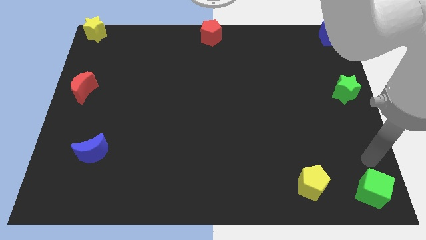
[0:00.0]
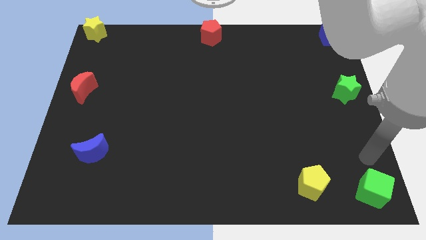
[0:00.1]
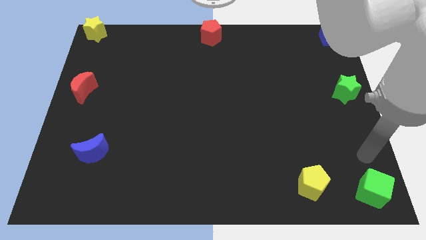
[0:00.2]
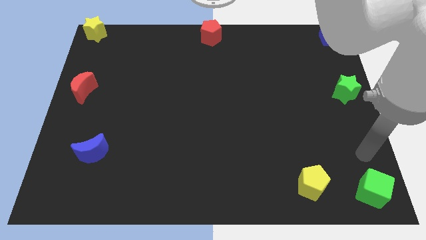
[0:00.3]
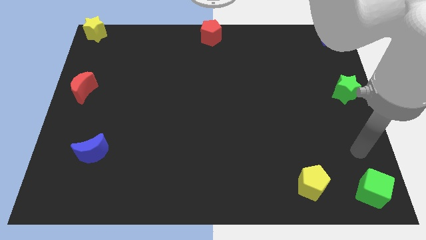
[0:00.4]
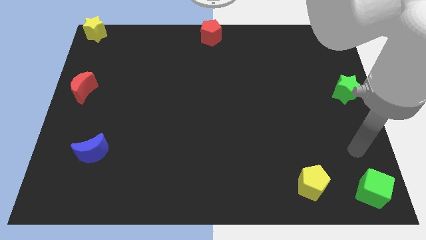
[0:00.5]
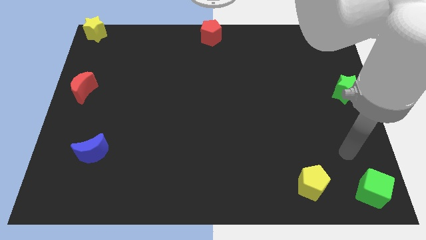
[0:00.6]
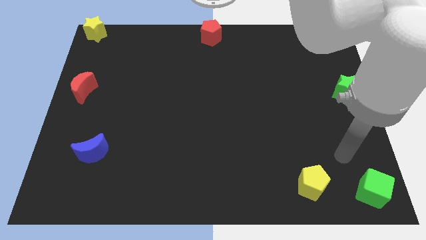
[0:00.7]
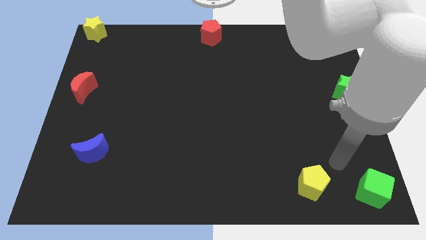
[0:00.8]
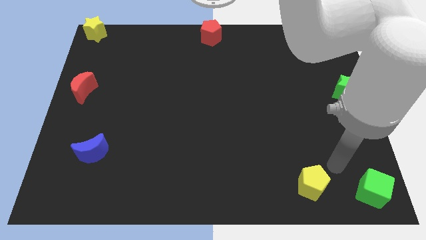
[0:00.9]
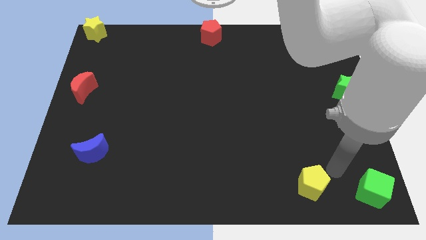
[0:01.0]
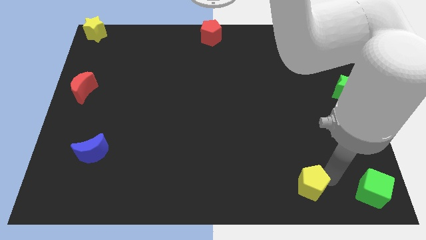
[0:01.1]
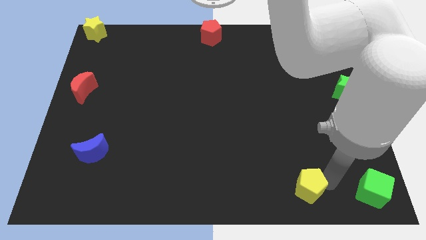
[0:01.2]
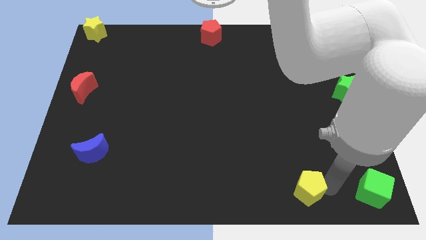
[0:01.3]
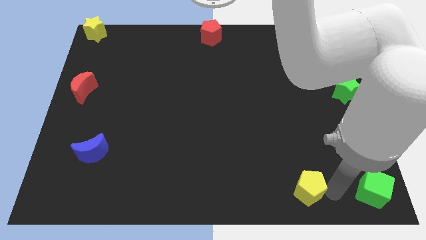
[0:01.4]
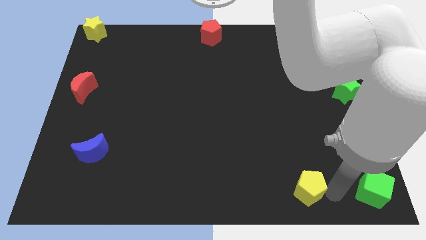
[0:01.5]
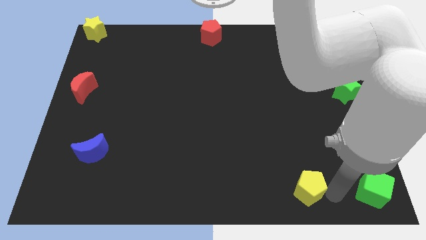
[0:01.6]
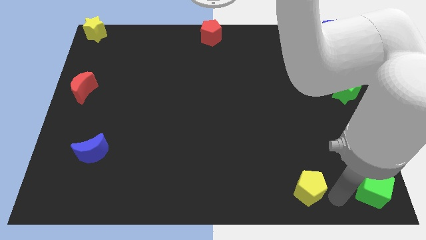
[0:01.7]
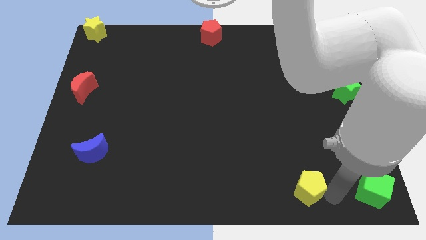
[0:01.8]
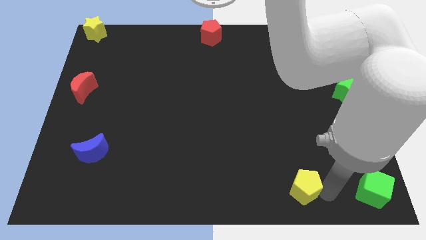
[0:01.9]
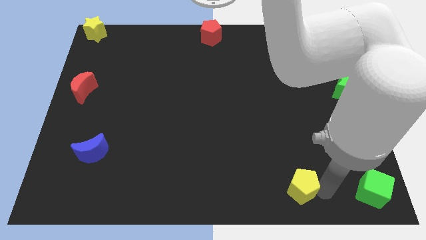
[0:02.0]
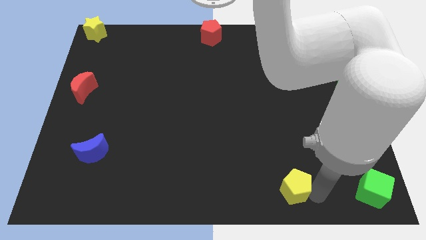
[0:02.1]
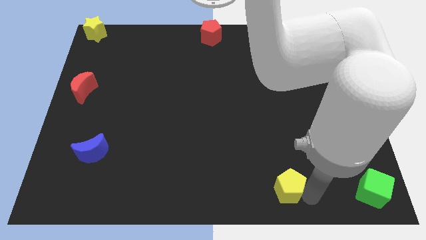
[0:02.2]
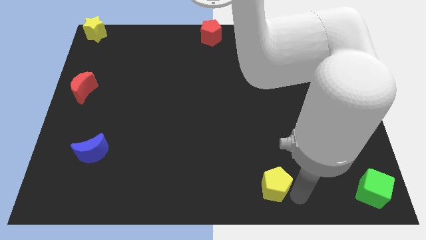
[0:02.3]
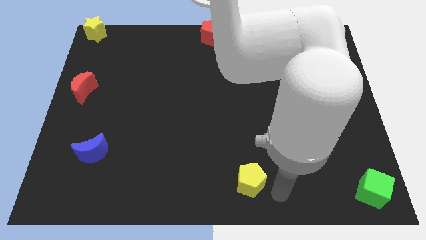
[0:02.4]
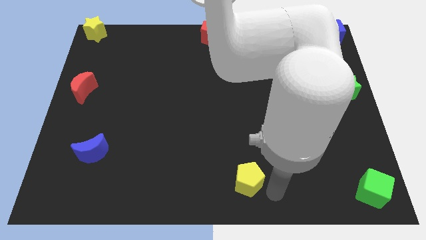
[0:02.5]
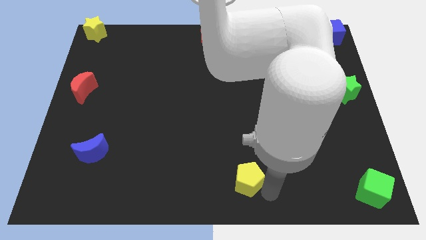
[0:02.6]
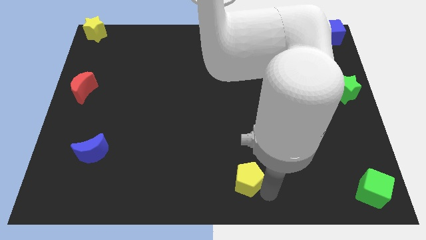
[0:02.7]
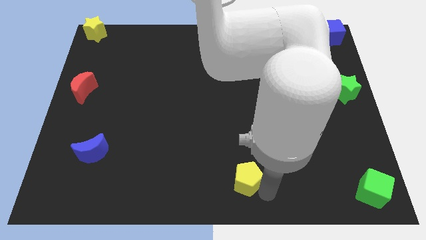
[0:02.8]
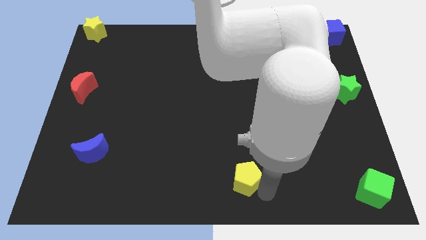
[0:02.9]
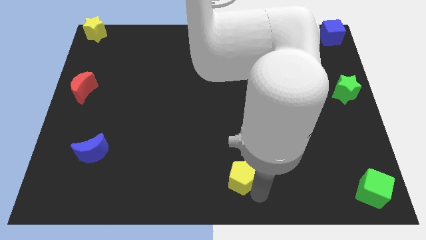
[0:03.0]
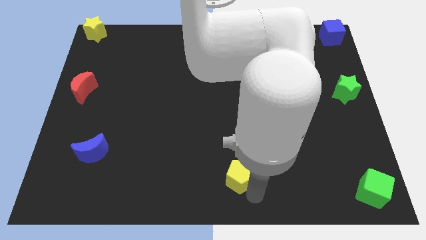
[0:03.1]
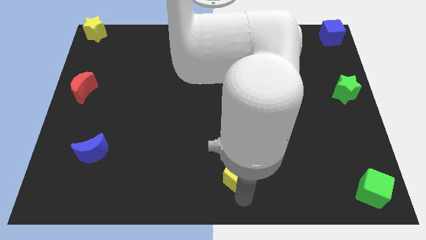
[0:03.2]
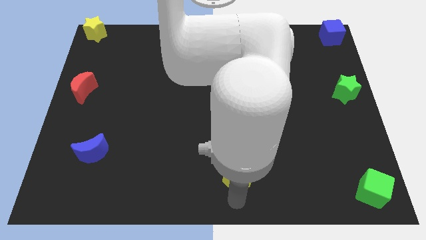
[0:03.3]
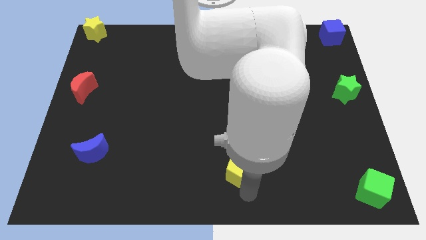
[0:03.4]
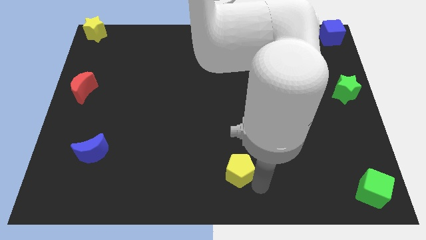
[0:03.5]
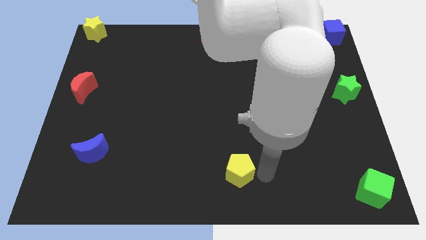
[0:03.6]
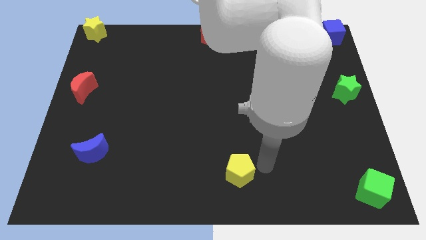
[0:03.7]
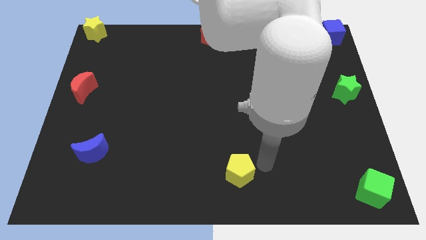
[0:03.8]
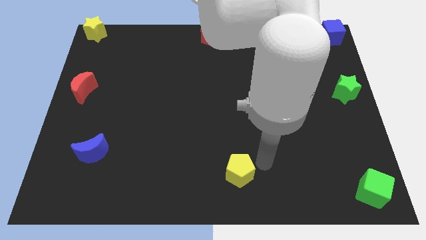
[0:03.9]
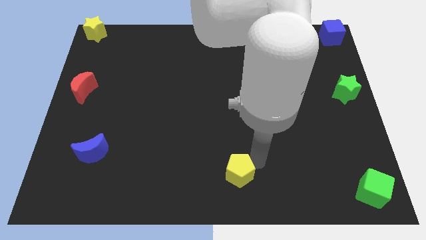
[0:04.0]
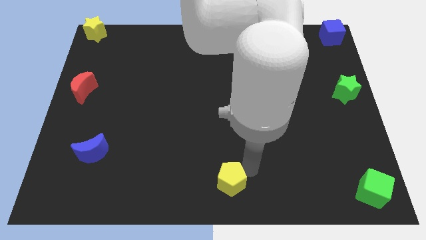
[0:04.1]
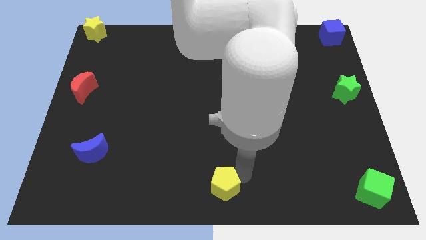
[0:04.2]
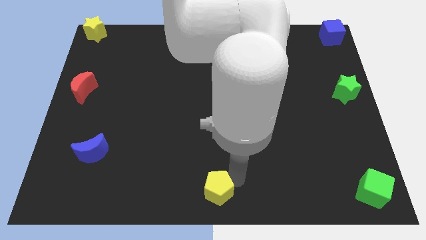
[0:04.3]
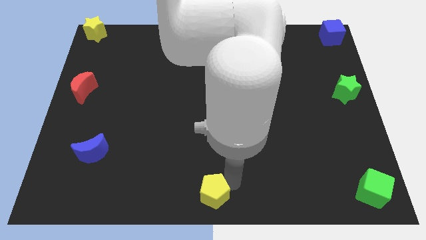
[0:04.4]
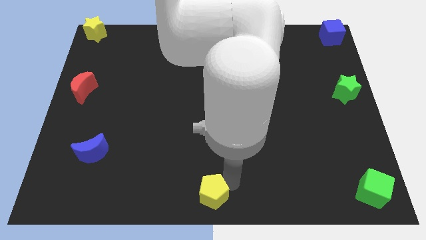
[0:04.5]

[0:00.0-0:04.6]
place the yellow pentagon at the bottom center of the board

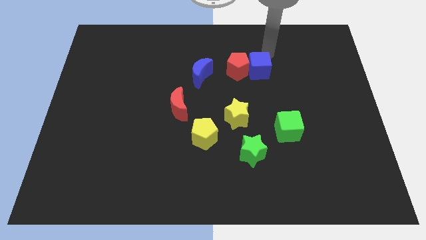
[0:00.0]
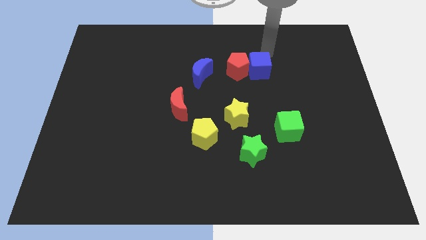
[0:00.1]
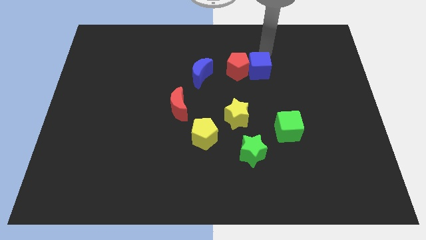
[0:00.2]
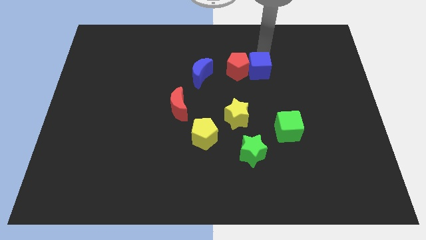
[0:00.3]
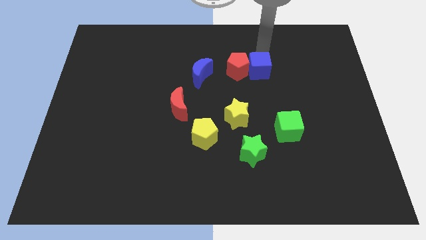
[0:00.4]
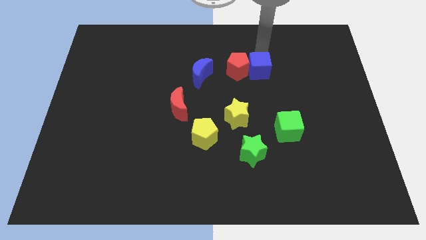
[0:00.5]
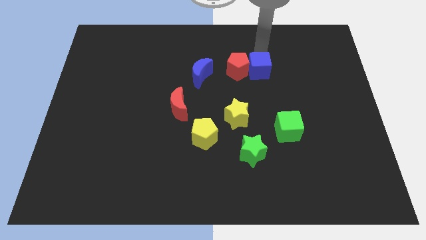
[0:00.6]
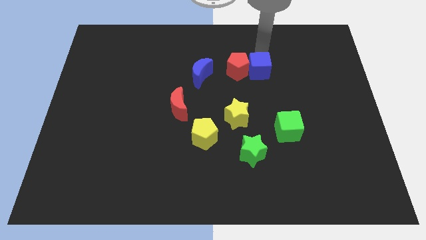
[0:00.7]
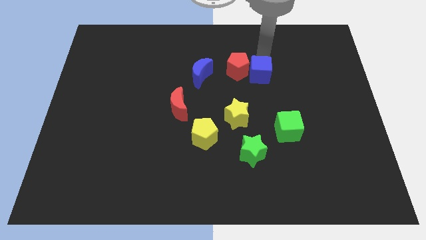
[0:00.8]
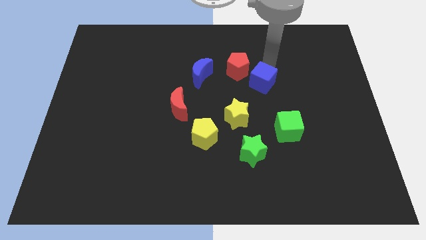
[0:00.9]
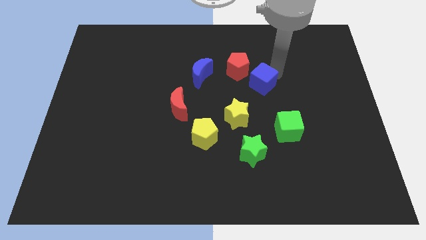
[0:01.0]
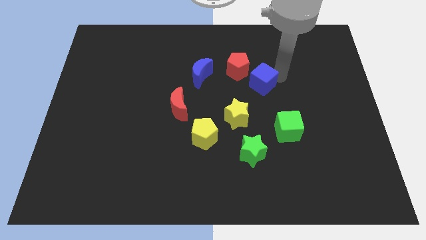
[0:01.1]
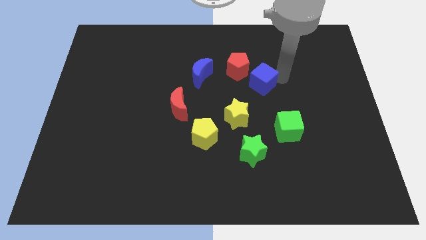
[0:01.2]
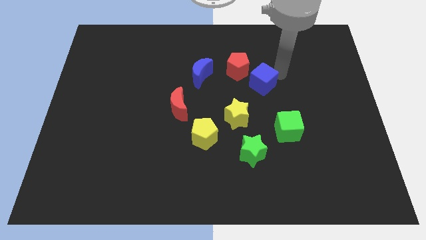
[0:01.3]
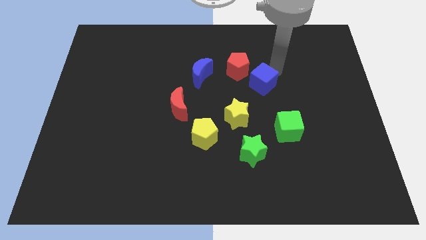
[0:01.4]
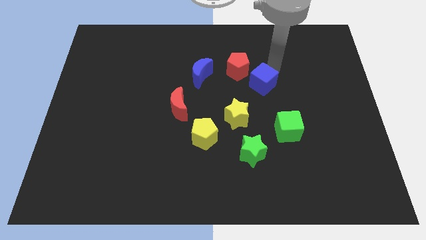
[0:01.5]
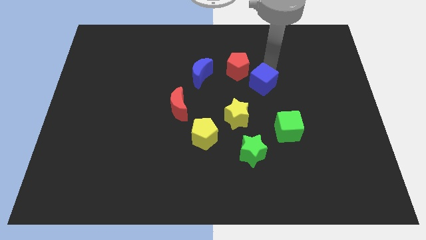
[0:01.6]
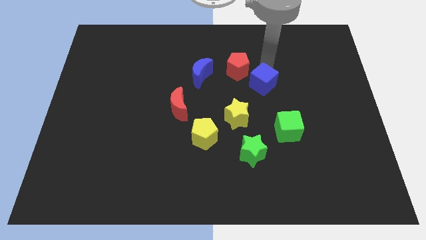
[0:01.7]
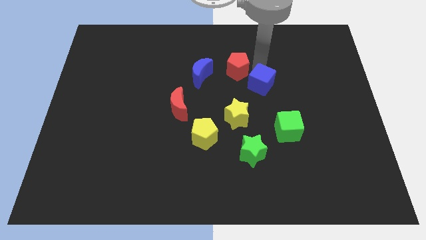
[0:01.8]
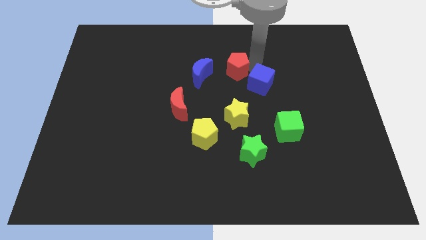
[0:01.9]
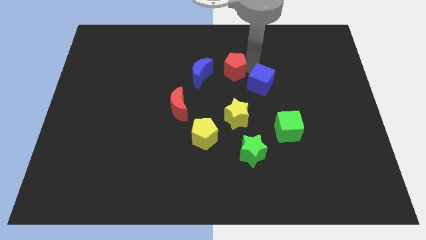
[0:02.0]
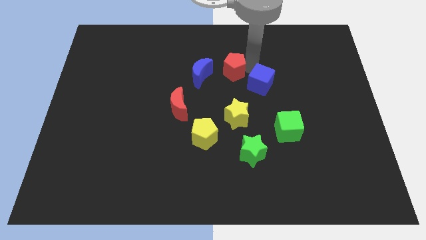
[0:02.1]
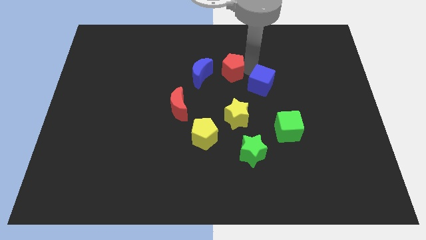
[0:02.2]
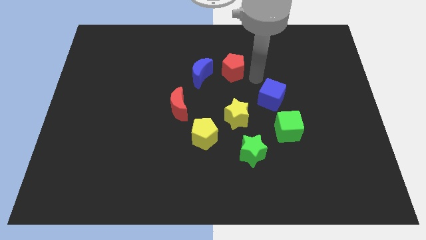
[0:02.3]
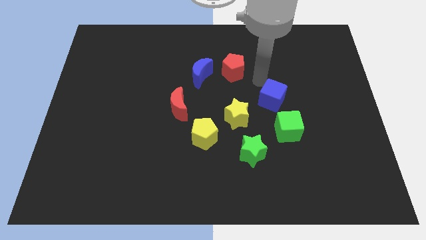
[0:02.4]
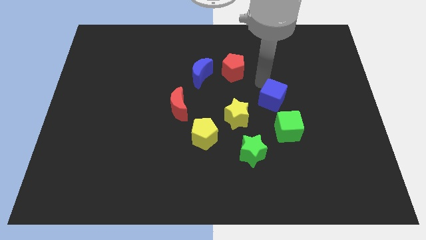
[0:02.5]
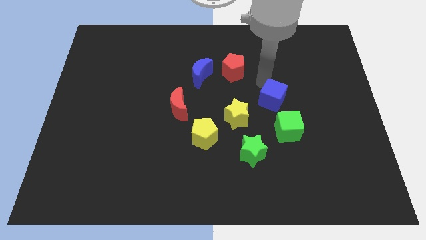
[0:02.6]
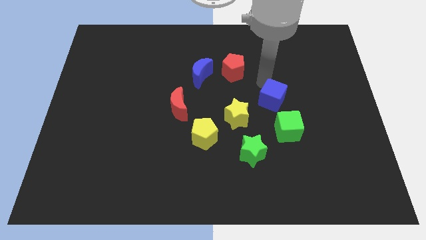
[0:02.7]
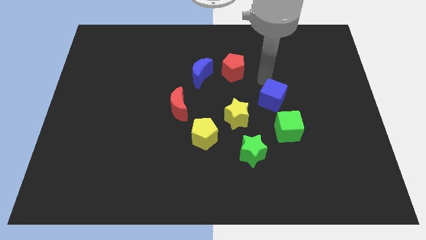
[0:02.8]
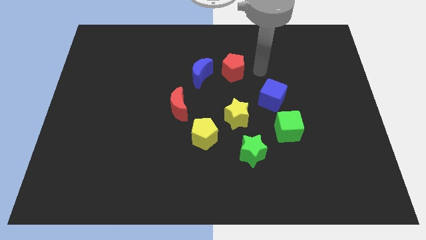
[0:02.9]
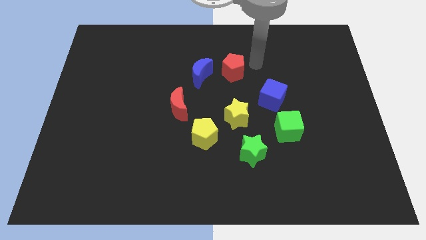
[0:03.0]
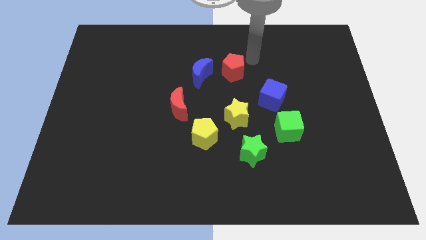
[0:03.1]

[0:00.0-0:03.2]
move blue cube towards green cube

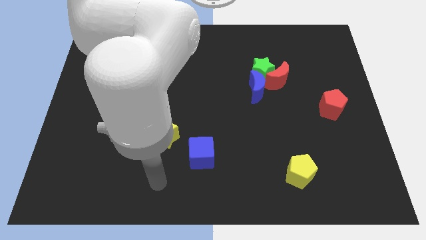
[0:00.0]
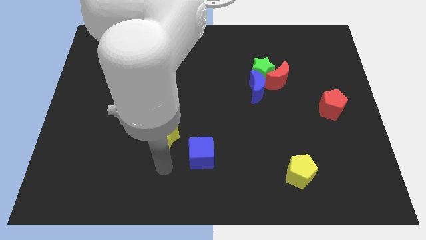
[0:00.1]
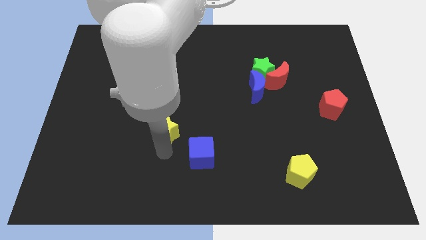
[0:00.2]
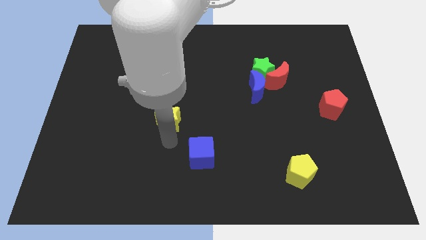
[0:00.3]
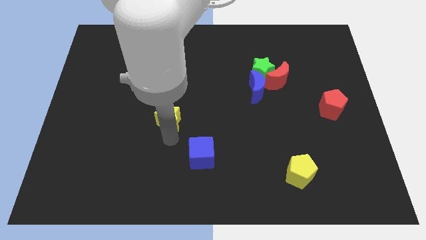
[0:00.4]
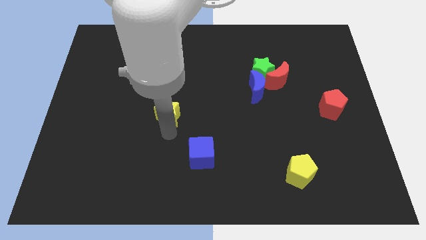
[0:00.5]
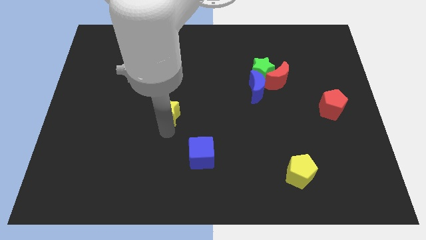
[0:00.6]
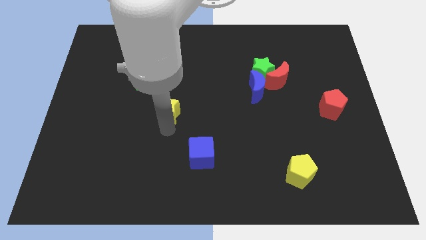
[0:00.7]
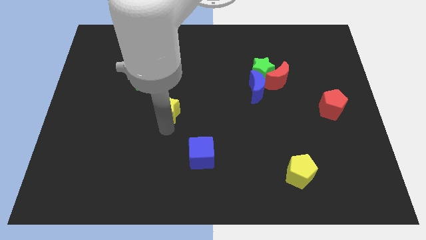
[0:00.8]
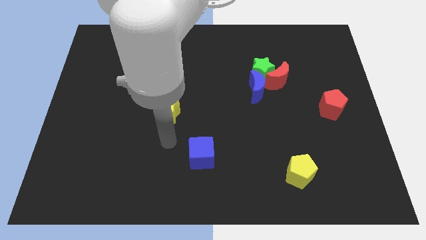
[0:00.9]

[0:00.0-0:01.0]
push the yellow star towards the green cube
